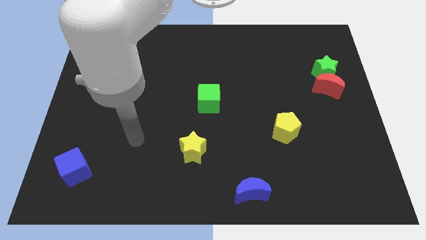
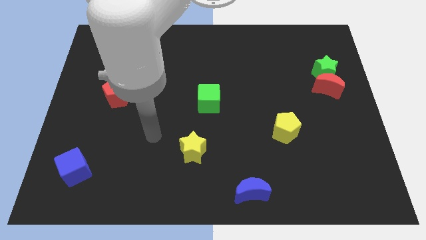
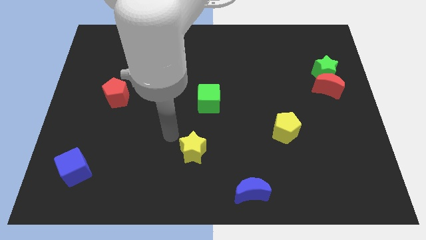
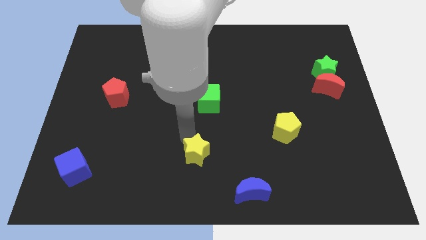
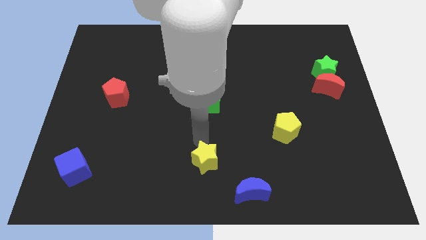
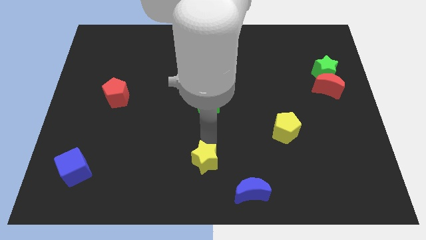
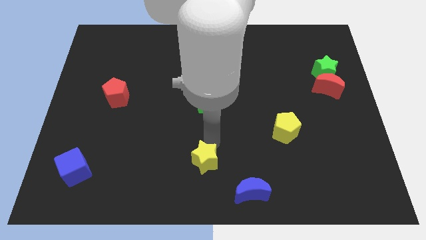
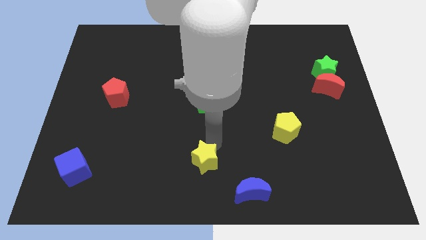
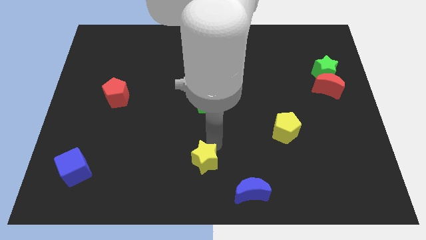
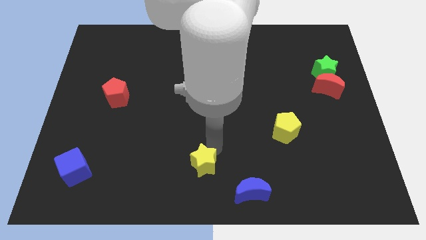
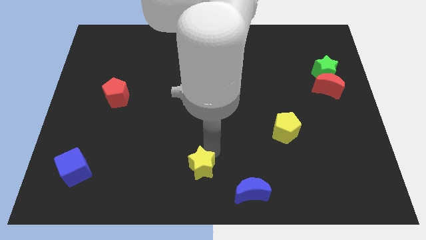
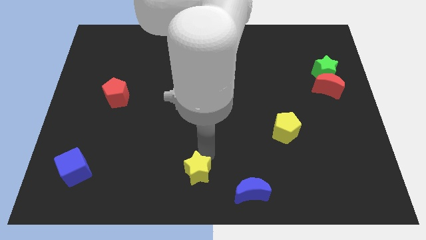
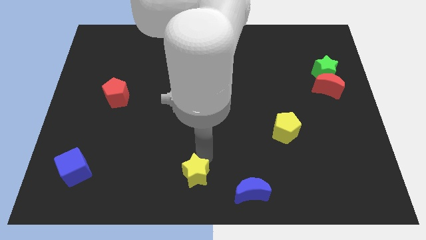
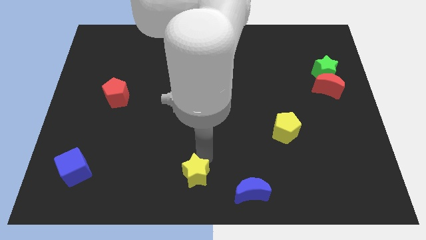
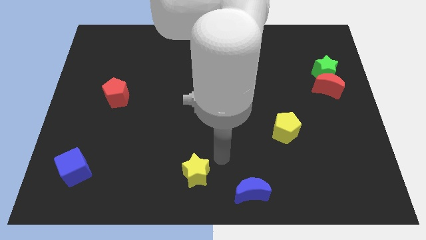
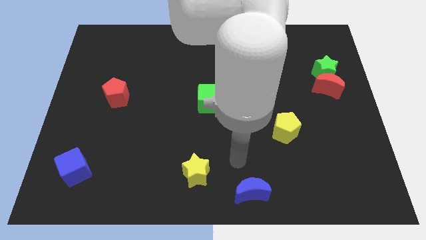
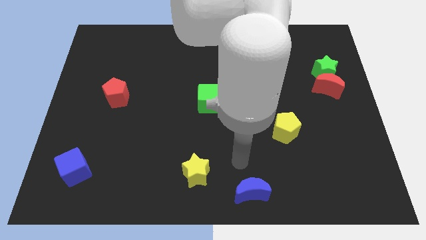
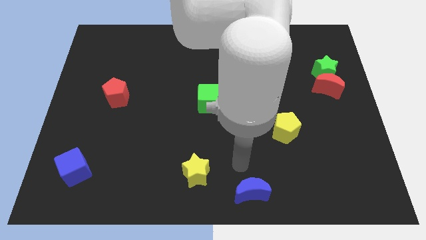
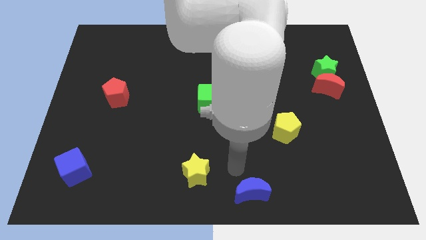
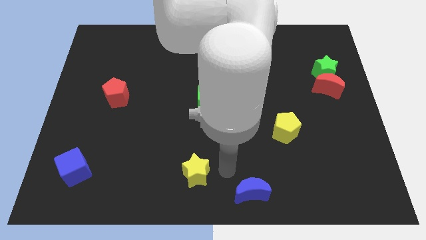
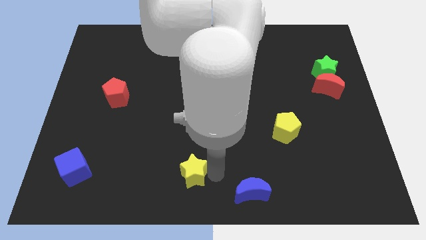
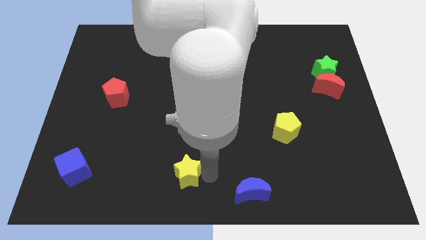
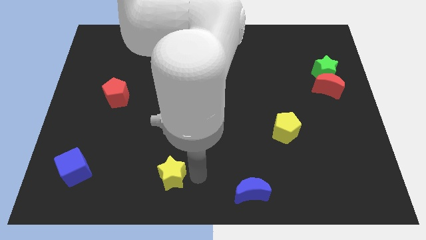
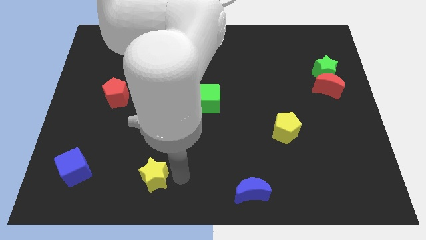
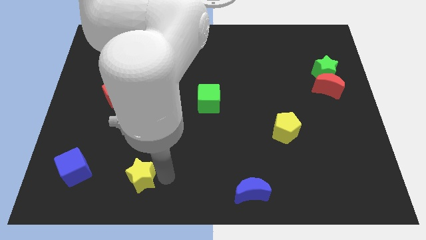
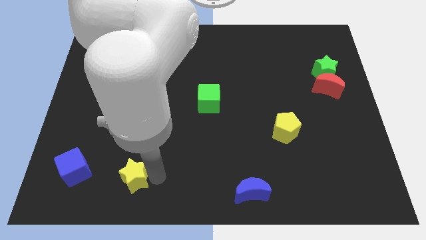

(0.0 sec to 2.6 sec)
move the yellow star slightly left

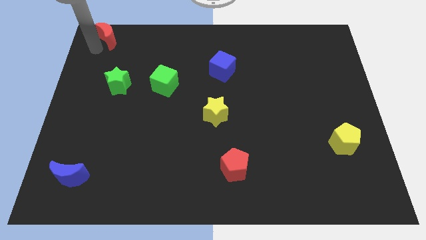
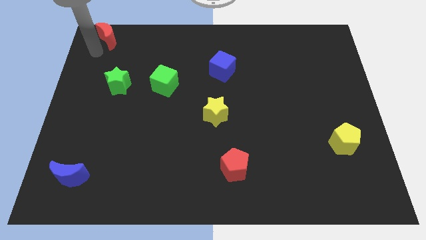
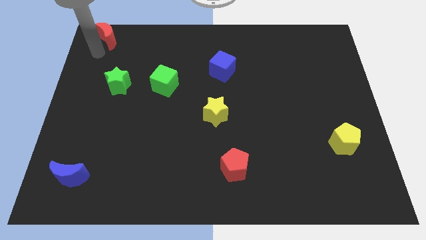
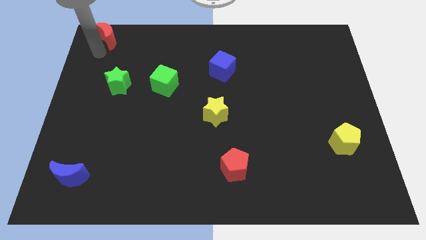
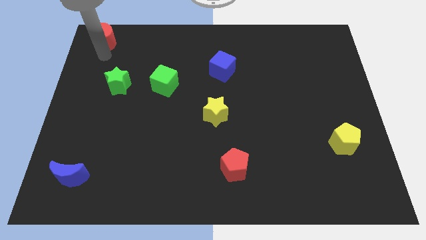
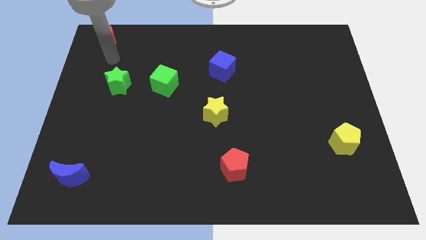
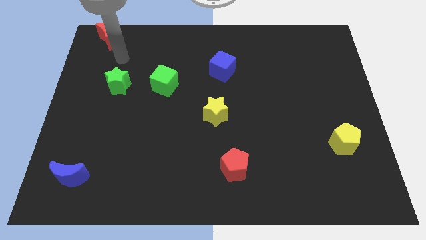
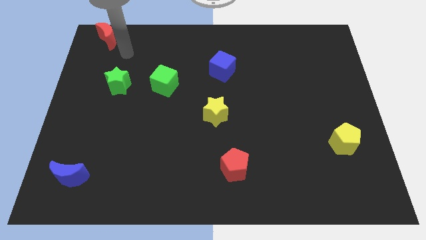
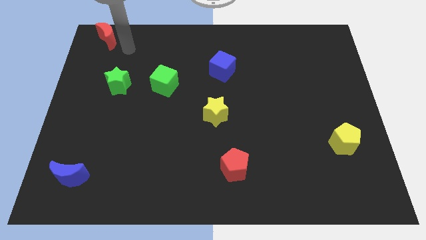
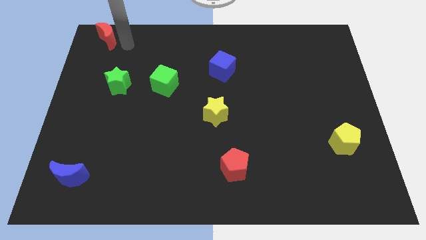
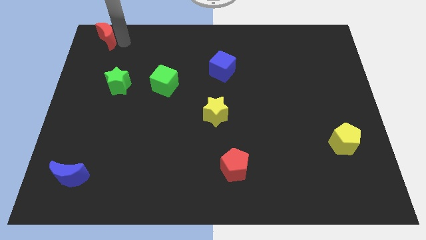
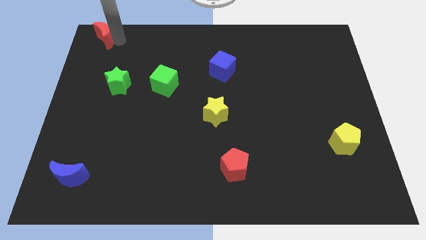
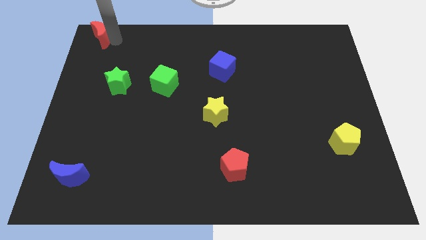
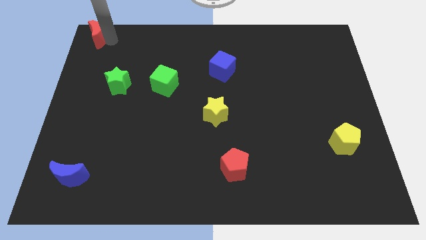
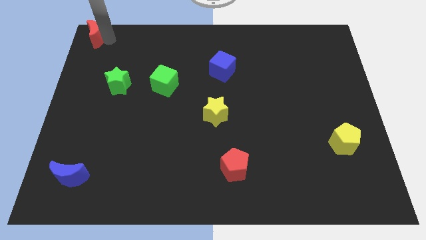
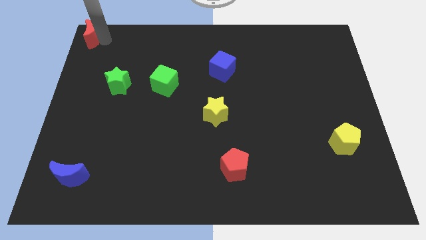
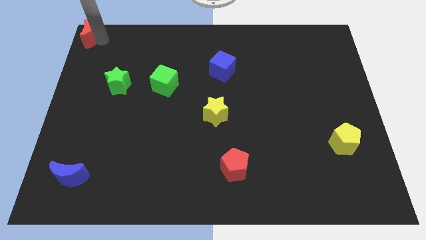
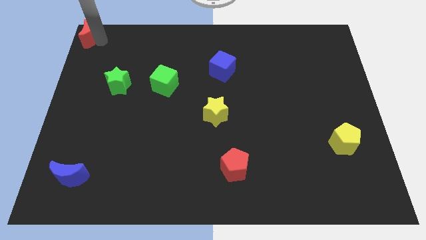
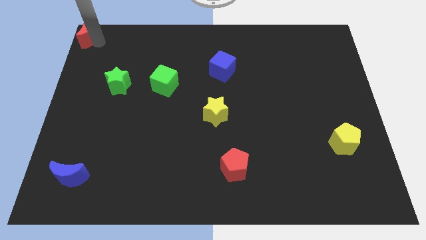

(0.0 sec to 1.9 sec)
place the red crescent to the top left corner of the board

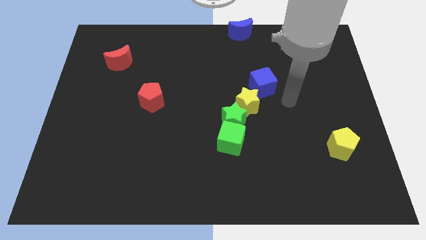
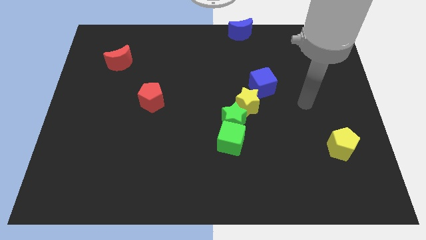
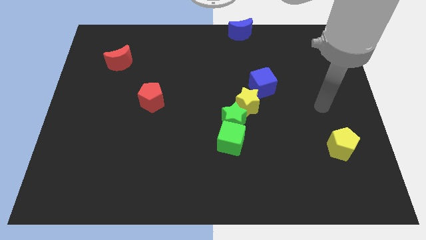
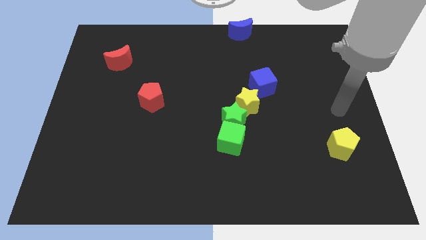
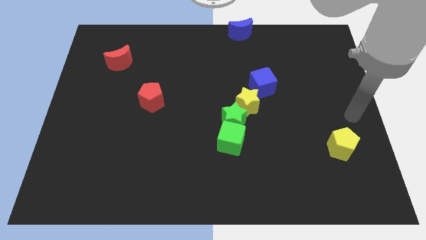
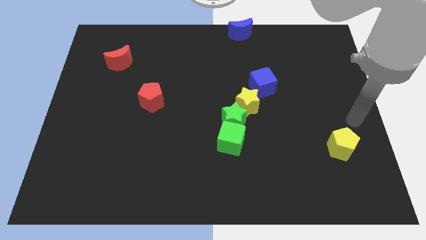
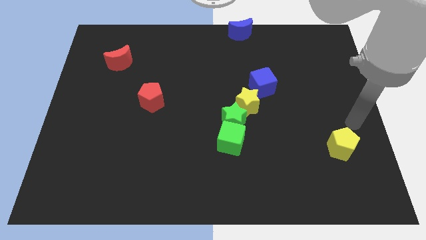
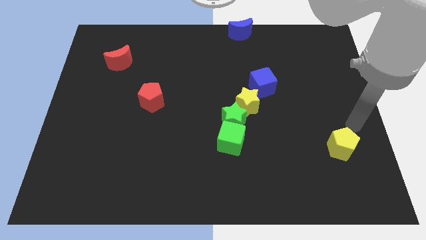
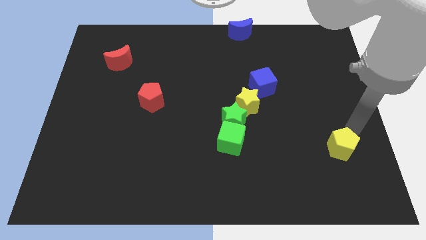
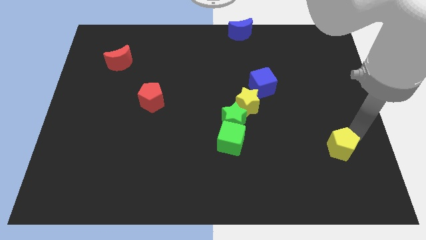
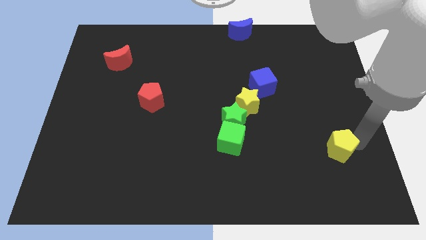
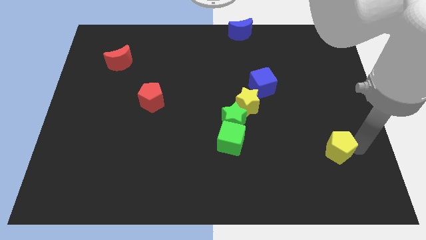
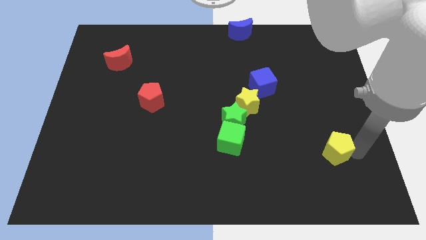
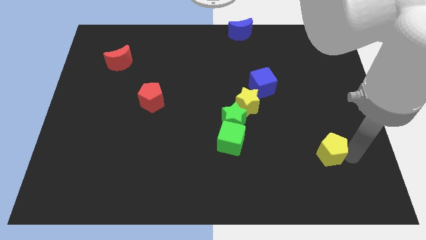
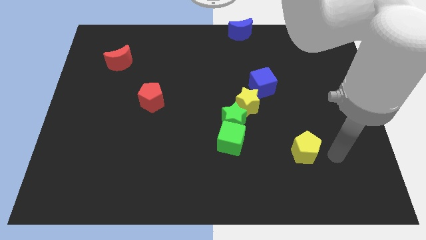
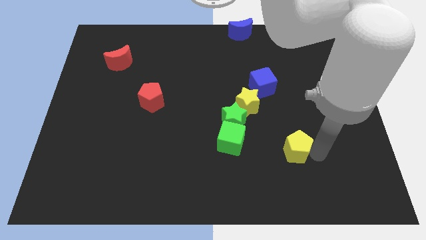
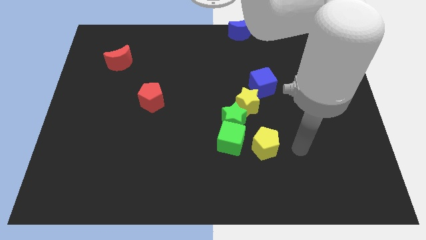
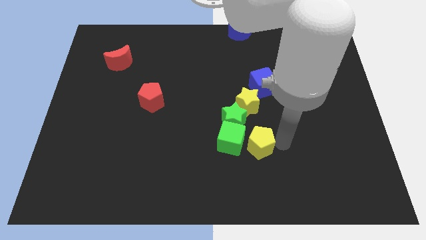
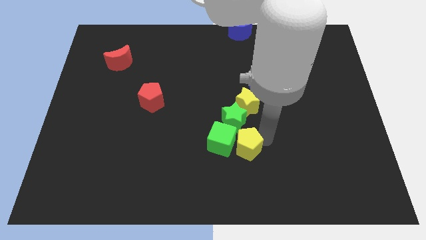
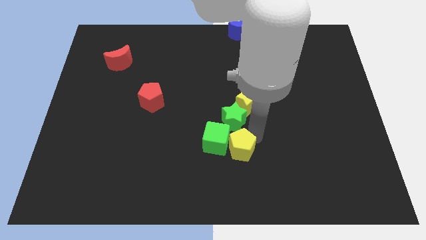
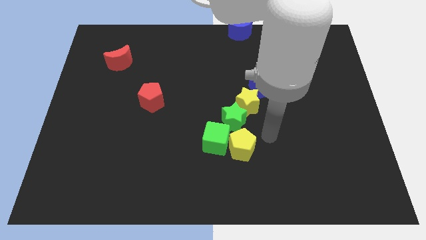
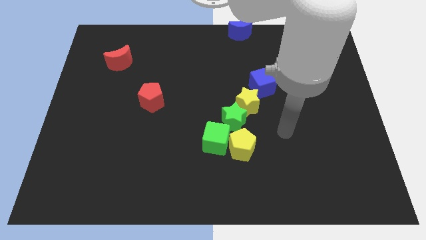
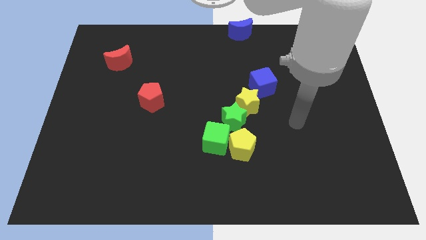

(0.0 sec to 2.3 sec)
move the yellow pentagon into the green cube

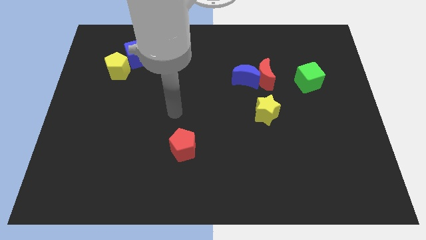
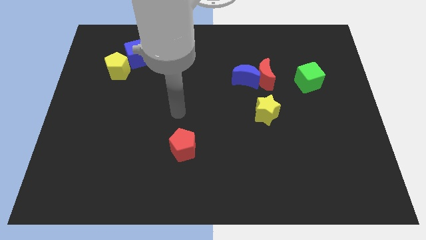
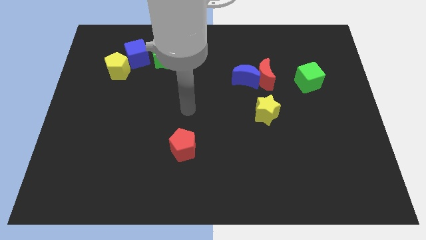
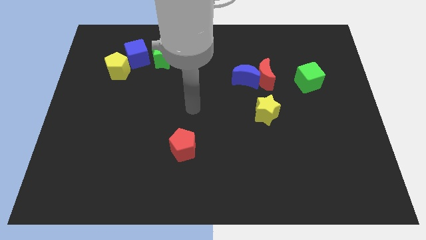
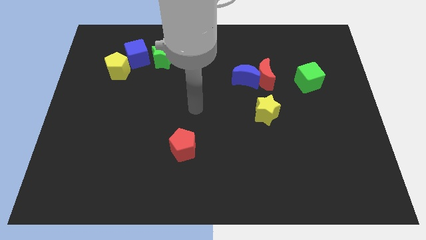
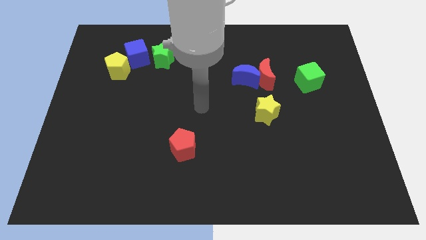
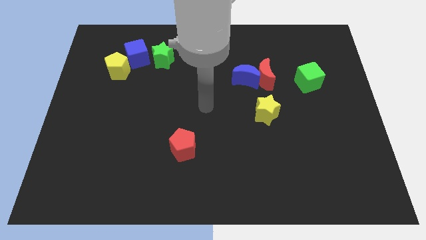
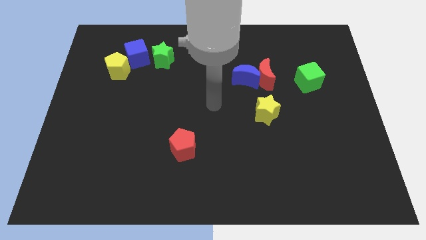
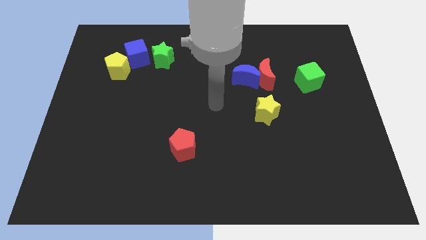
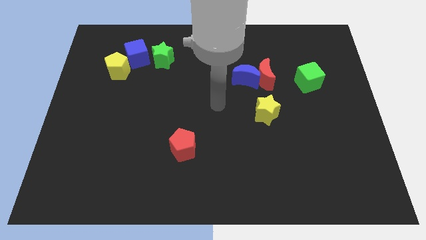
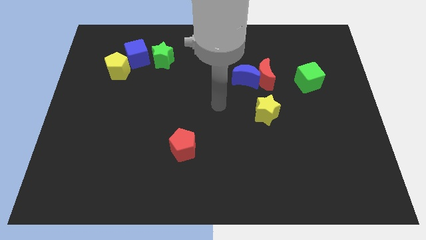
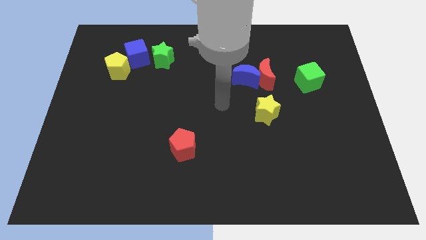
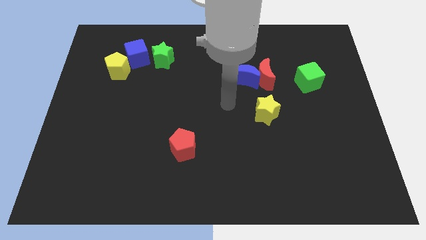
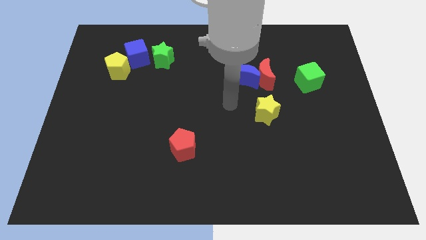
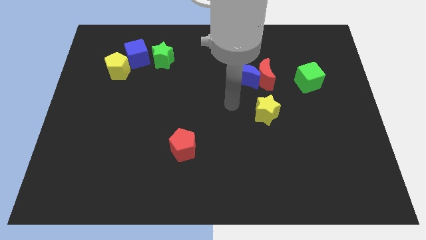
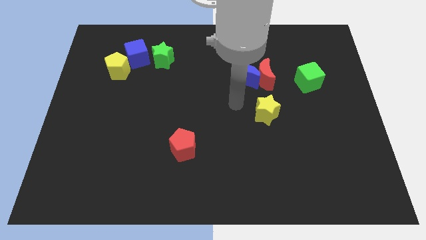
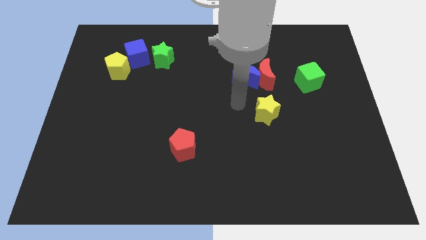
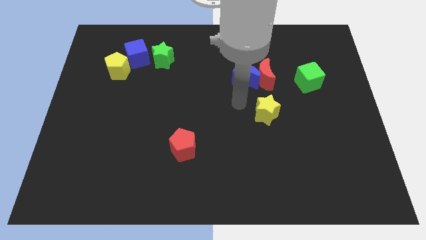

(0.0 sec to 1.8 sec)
place your arm at the bottom of the blue crescent

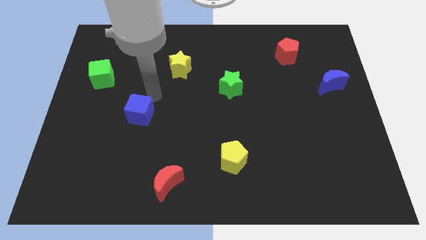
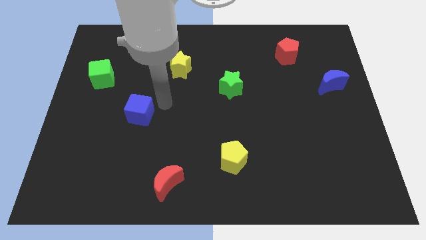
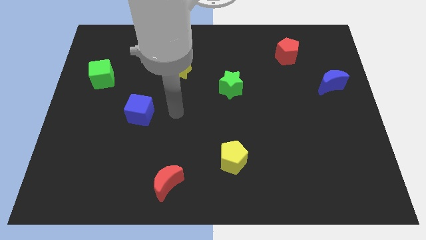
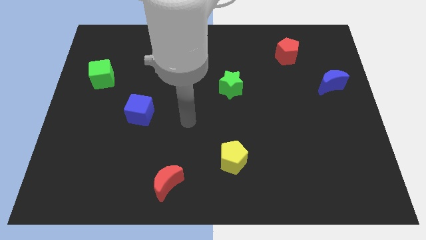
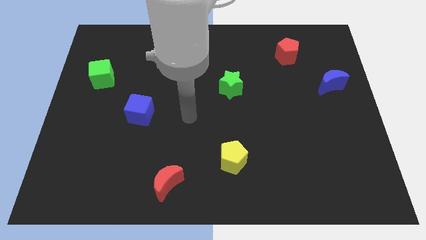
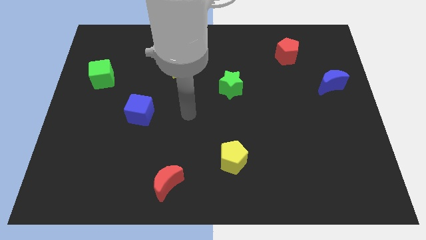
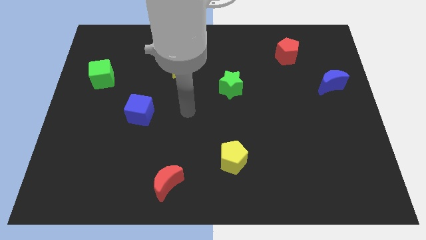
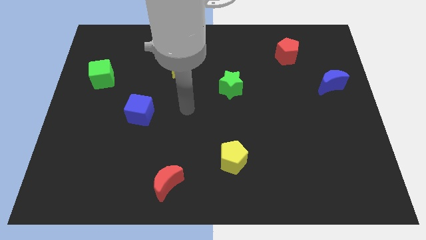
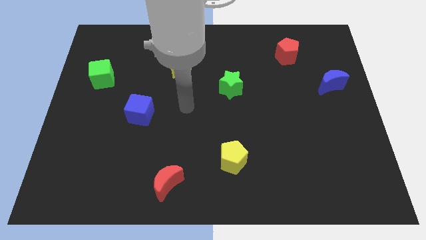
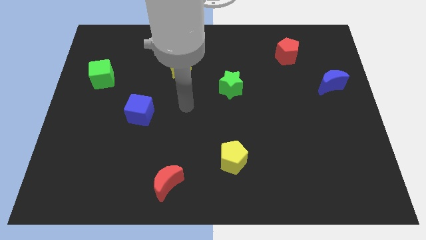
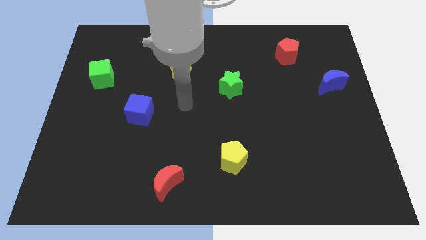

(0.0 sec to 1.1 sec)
place your hand at center of the board
